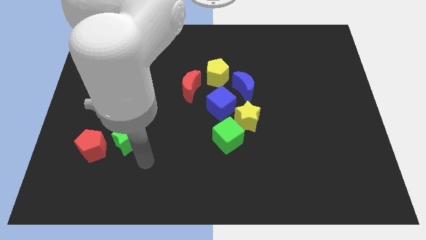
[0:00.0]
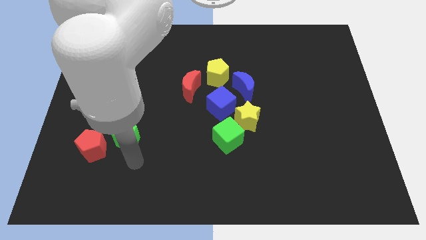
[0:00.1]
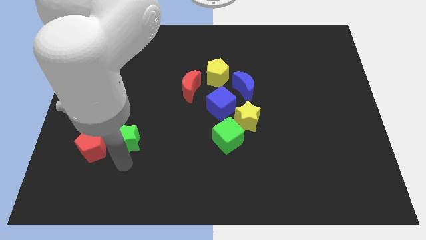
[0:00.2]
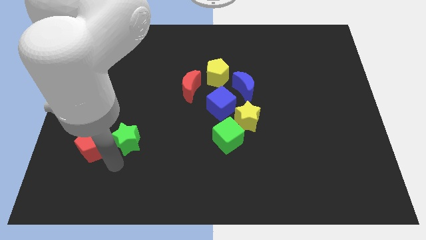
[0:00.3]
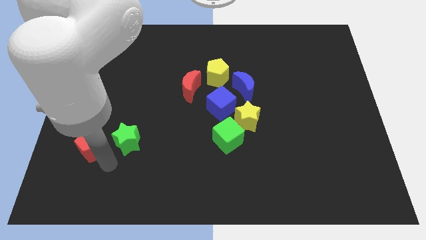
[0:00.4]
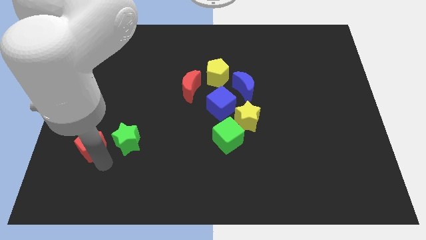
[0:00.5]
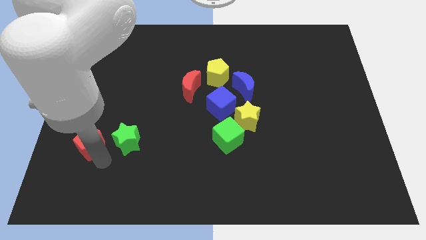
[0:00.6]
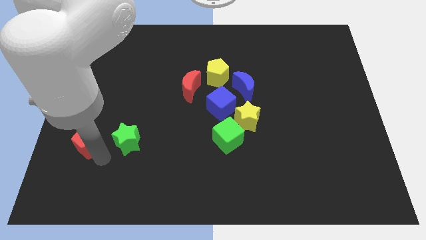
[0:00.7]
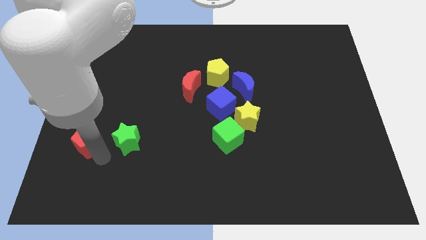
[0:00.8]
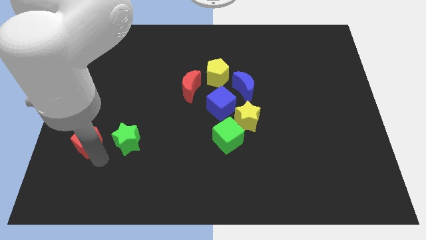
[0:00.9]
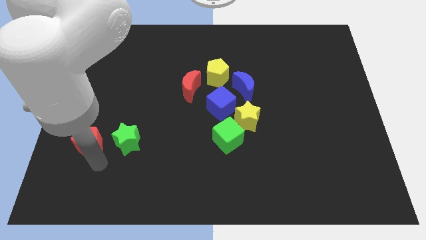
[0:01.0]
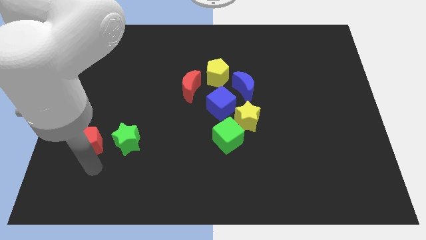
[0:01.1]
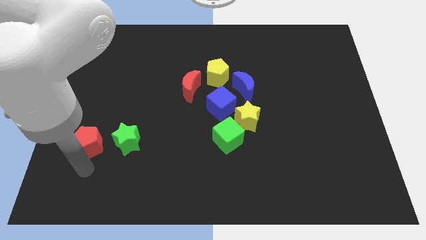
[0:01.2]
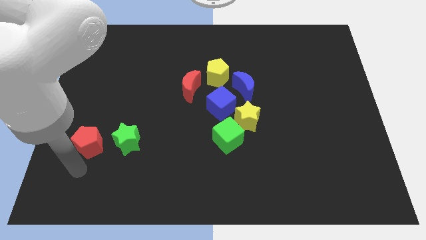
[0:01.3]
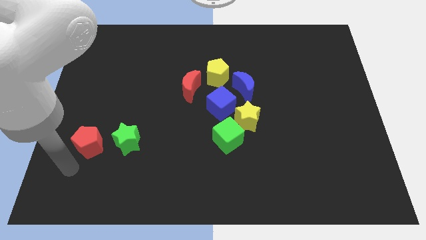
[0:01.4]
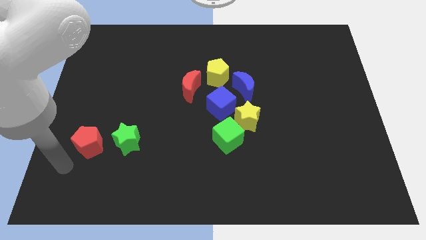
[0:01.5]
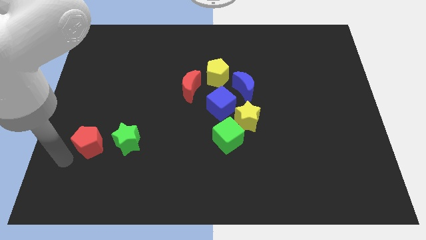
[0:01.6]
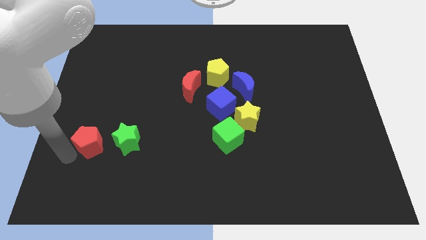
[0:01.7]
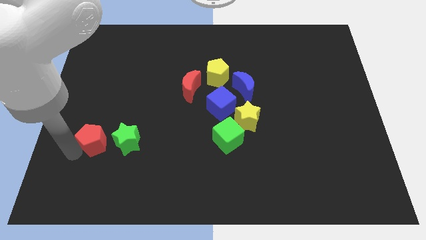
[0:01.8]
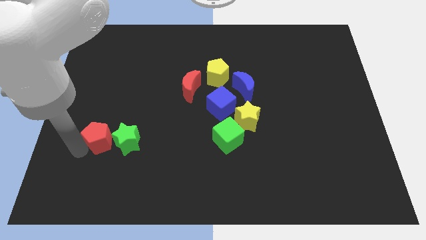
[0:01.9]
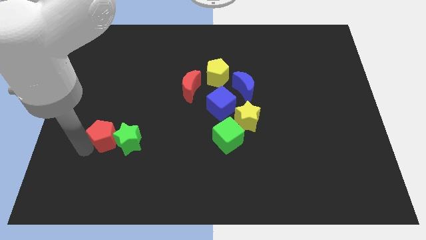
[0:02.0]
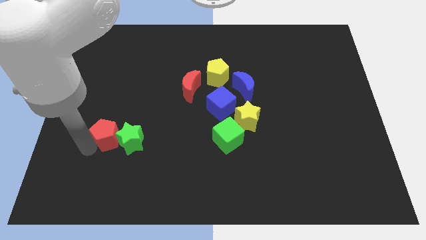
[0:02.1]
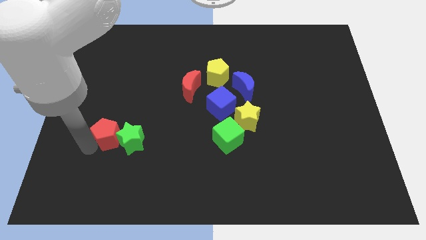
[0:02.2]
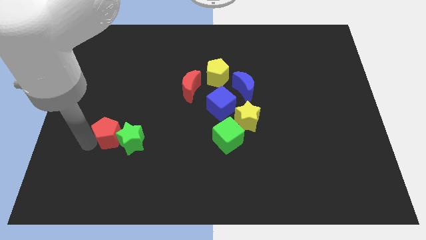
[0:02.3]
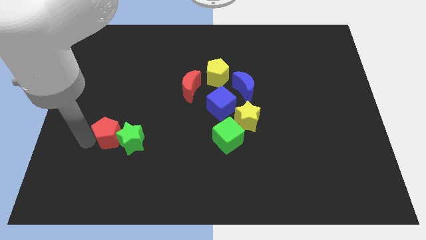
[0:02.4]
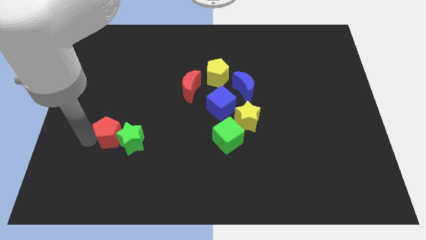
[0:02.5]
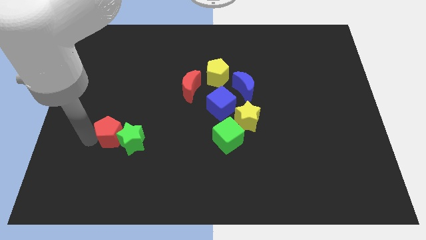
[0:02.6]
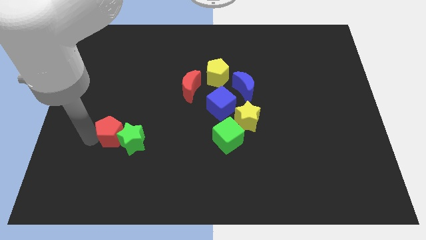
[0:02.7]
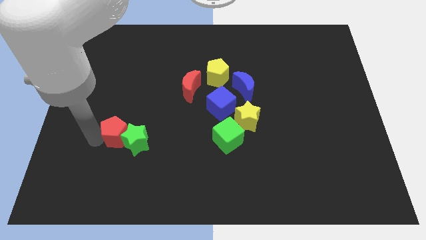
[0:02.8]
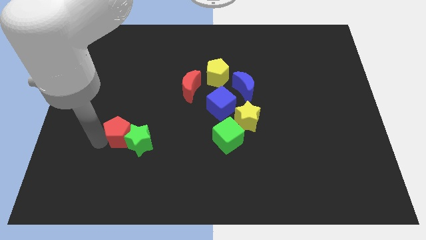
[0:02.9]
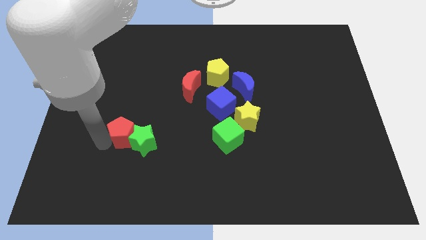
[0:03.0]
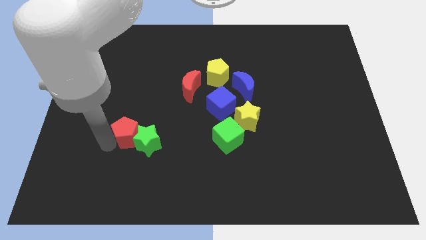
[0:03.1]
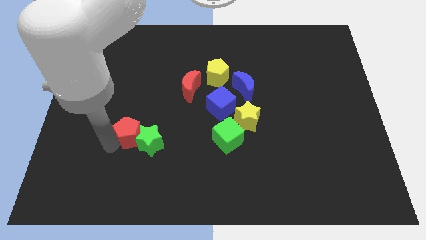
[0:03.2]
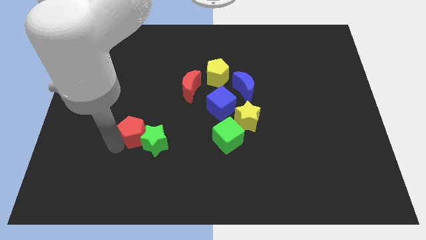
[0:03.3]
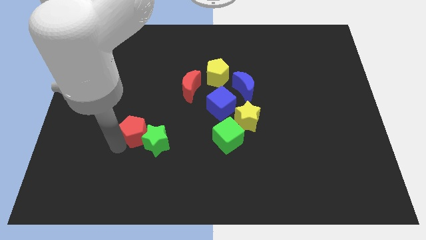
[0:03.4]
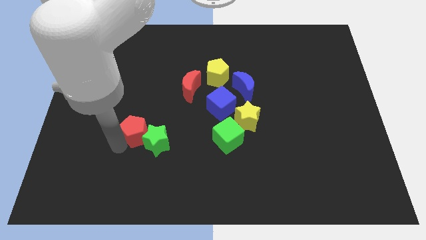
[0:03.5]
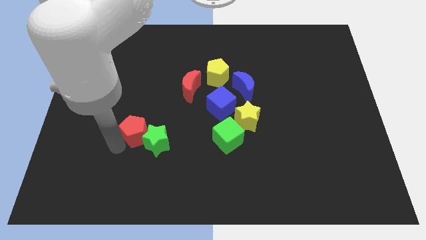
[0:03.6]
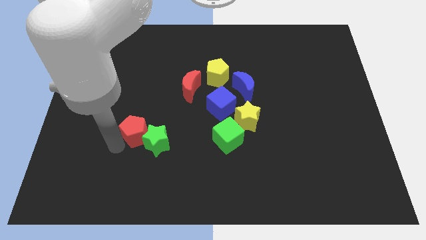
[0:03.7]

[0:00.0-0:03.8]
push the green star and red pentagon towards group of blocks

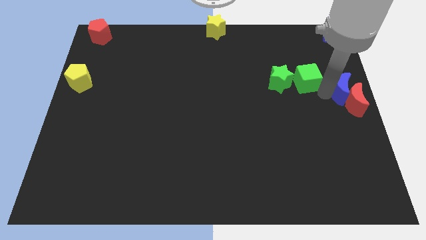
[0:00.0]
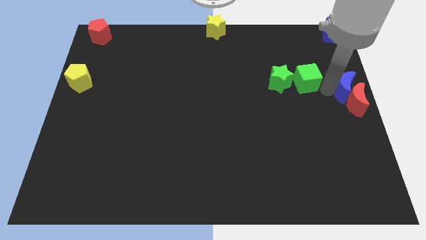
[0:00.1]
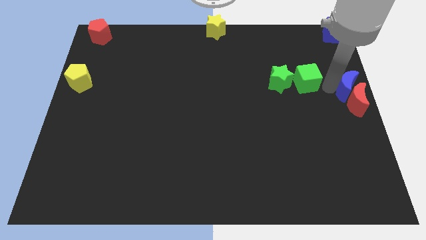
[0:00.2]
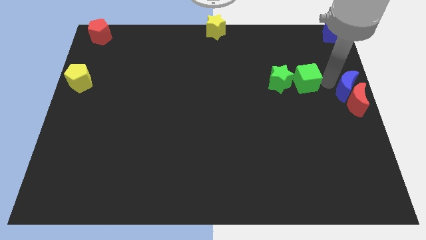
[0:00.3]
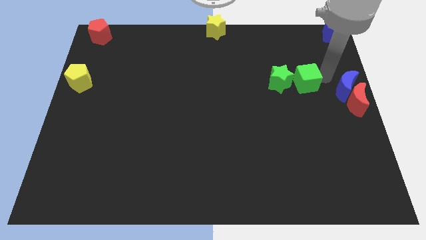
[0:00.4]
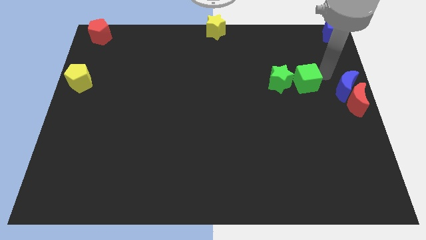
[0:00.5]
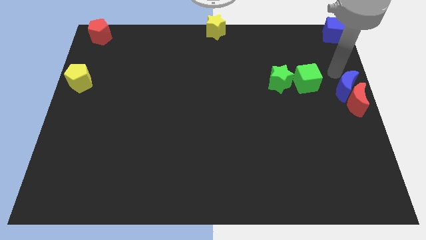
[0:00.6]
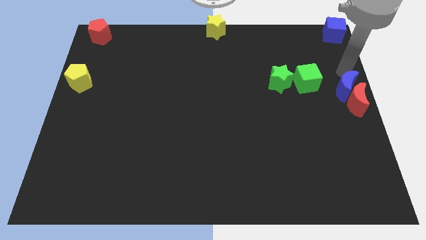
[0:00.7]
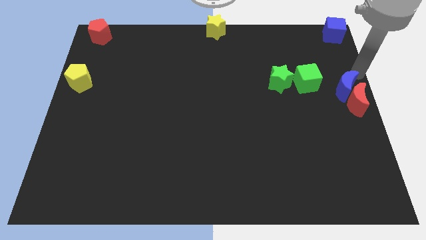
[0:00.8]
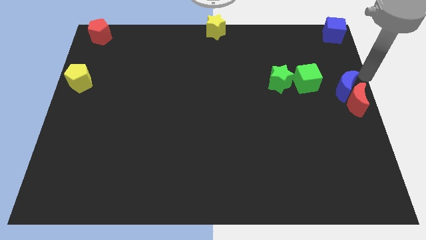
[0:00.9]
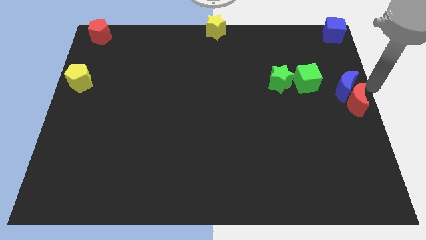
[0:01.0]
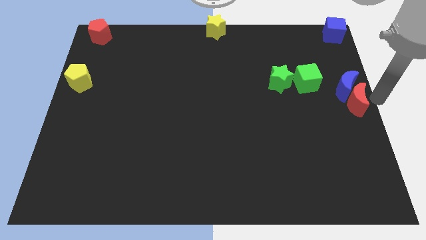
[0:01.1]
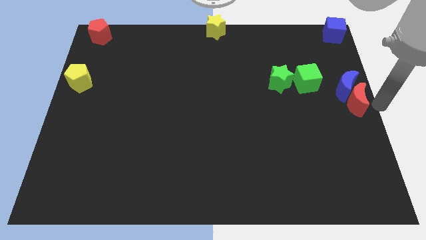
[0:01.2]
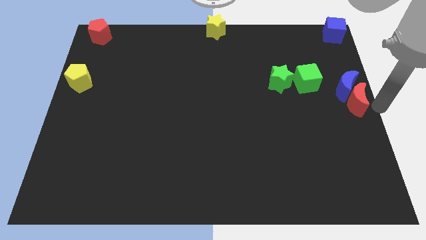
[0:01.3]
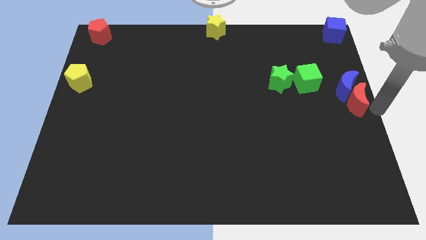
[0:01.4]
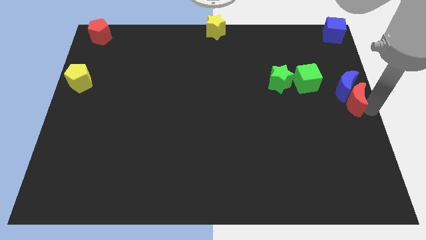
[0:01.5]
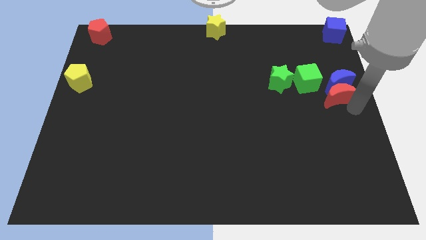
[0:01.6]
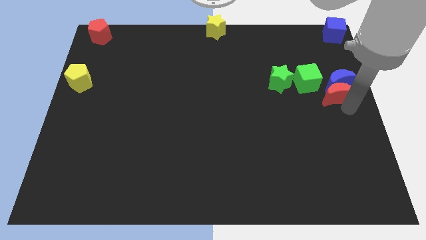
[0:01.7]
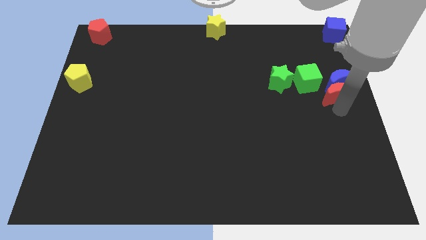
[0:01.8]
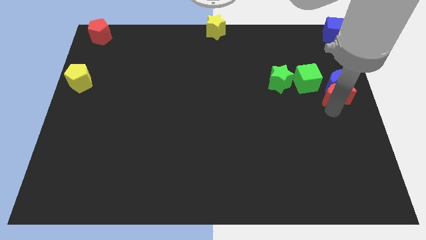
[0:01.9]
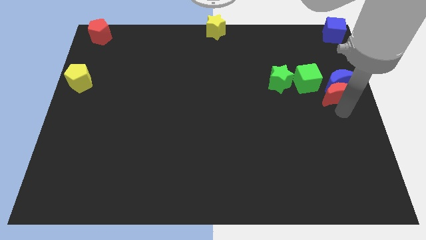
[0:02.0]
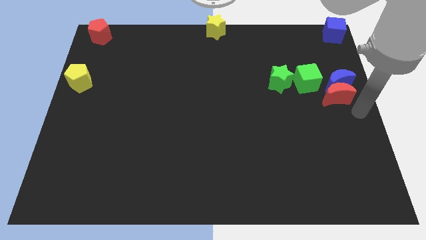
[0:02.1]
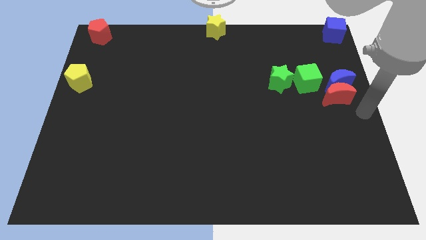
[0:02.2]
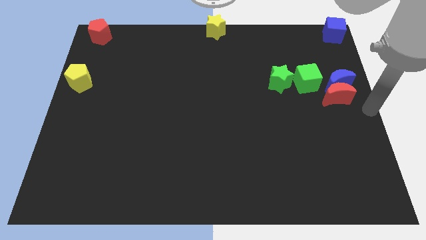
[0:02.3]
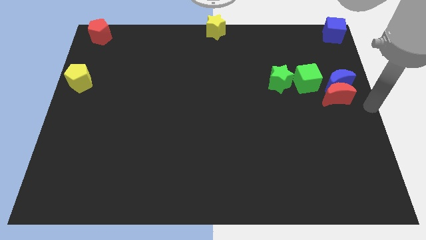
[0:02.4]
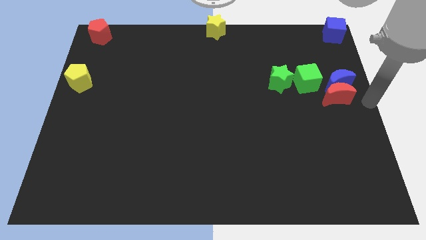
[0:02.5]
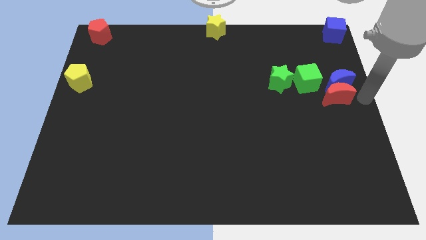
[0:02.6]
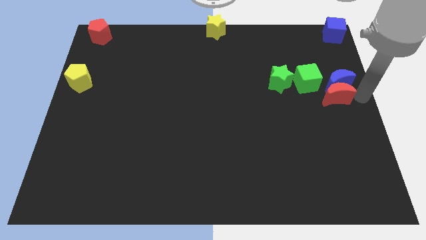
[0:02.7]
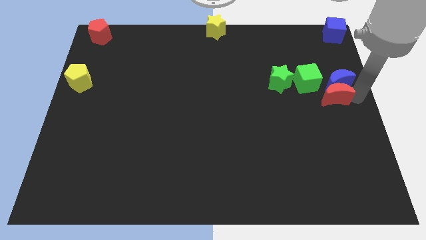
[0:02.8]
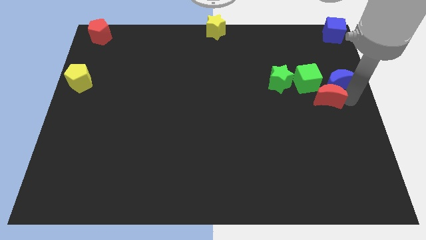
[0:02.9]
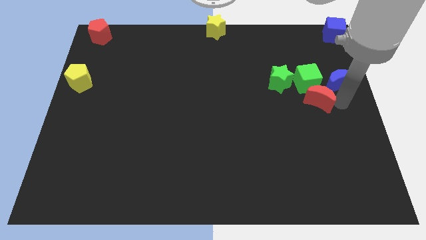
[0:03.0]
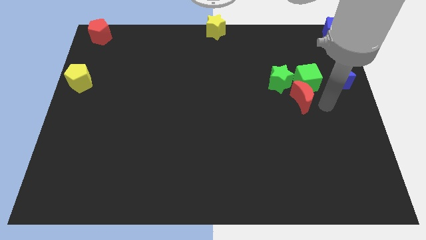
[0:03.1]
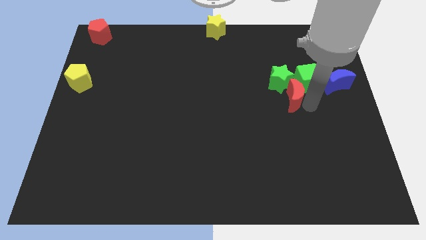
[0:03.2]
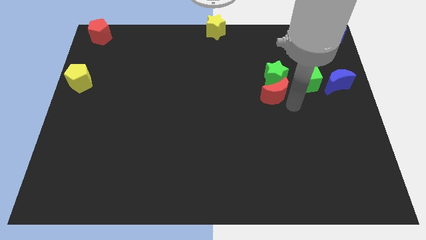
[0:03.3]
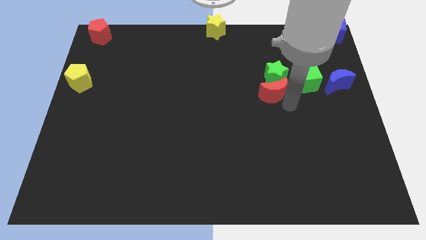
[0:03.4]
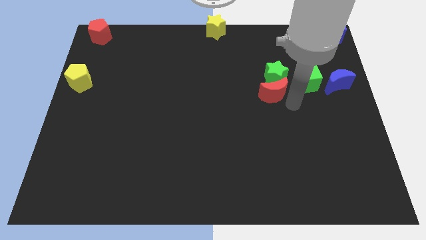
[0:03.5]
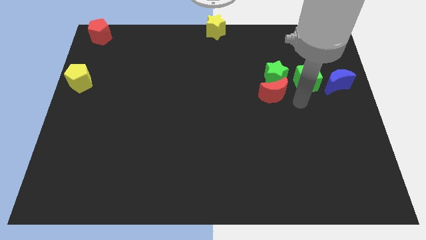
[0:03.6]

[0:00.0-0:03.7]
push the red moon to the bottom side of the green star

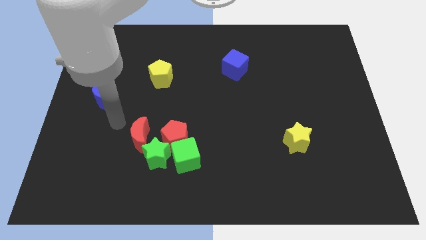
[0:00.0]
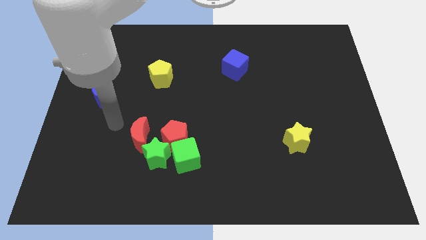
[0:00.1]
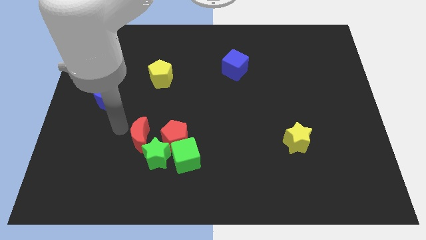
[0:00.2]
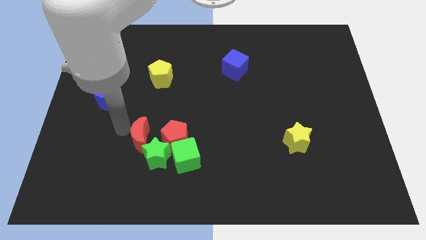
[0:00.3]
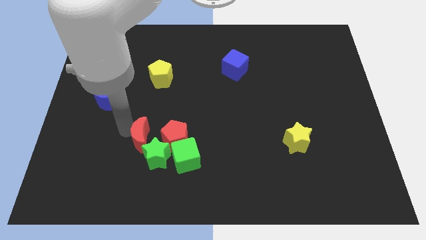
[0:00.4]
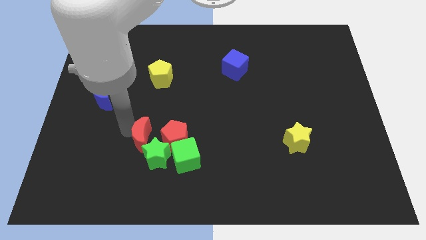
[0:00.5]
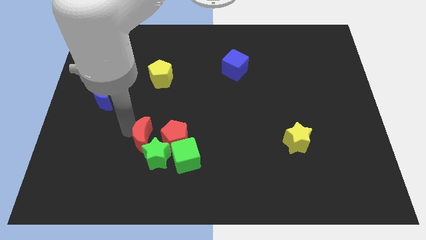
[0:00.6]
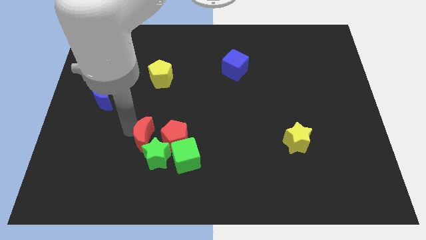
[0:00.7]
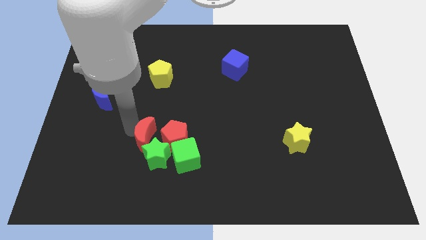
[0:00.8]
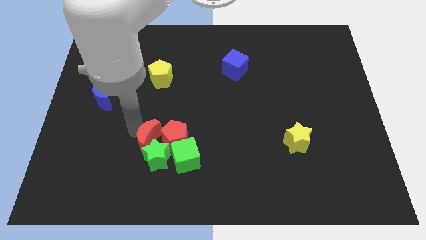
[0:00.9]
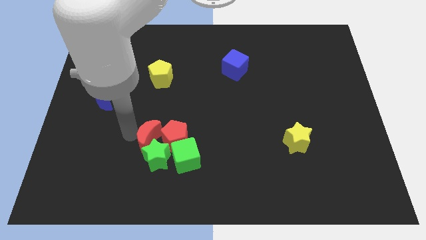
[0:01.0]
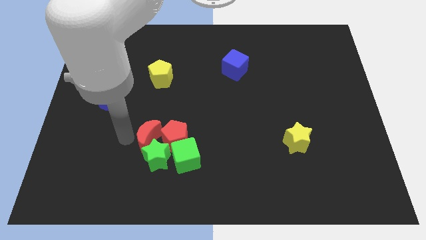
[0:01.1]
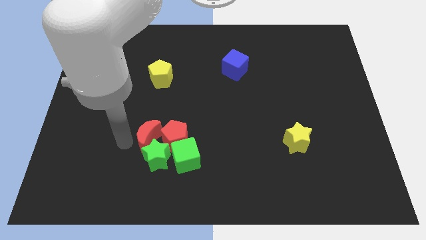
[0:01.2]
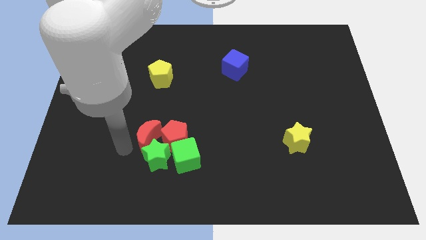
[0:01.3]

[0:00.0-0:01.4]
move the red crescent close to the green star and red pentagon

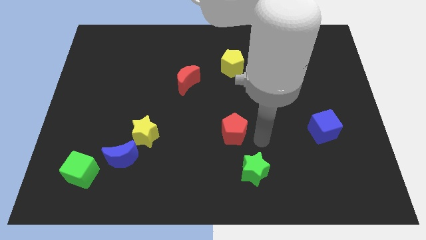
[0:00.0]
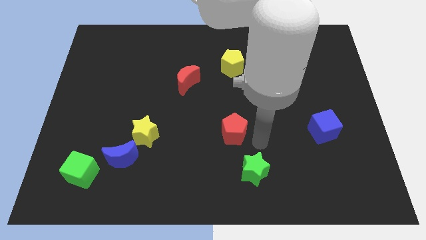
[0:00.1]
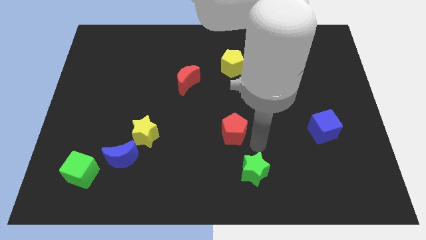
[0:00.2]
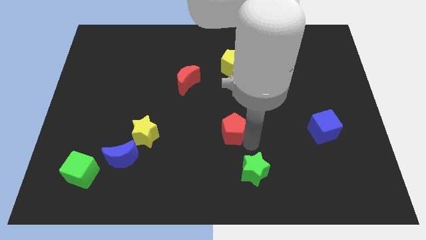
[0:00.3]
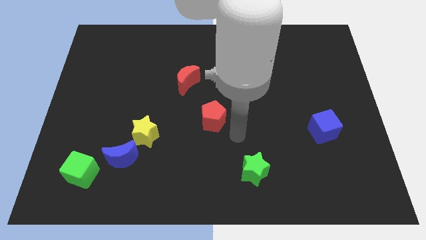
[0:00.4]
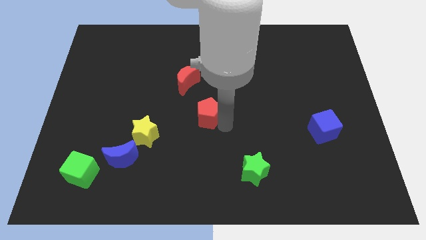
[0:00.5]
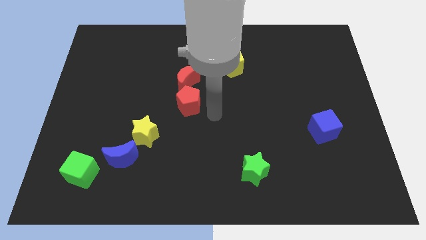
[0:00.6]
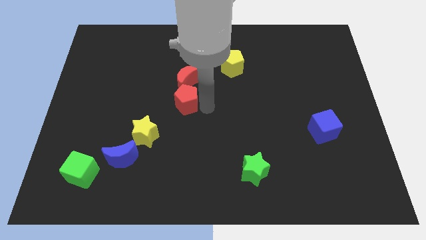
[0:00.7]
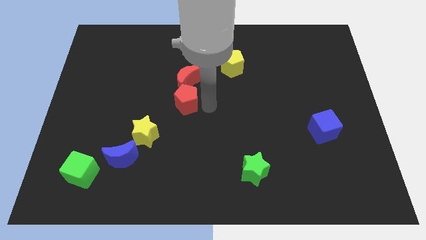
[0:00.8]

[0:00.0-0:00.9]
move the red pentagon into the red moon
